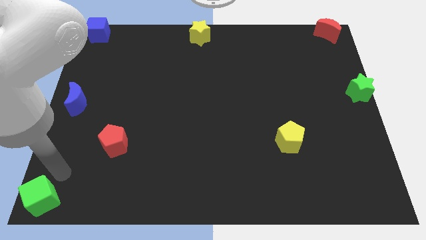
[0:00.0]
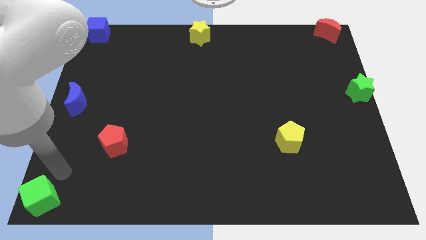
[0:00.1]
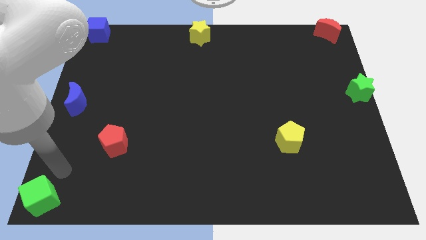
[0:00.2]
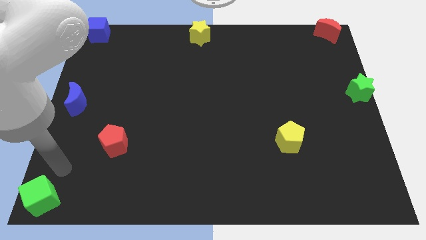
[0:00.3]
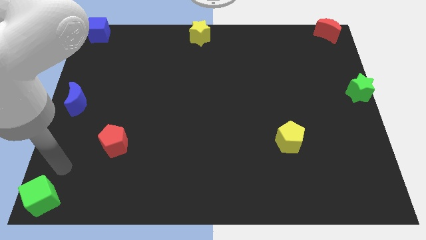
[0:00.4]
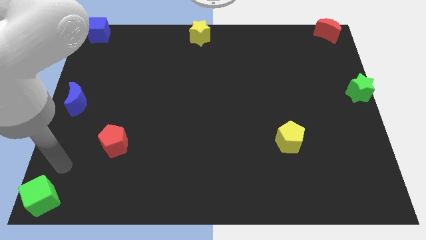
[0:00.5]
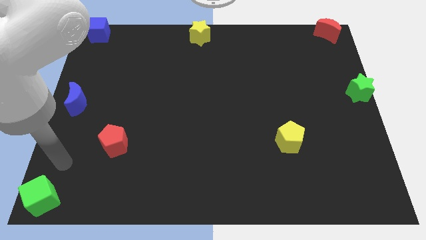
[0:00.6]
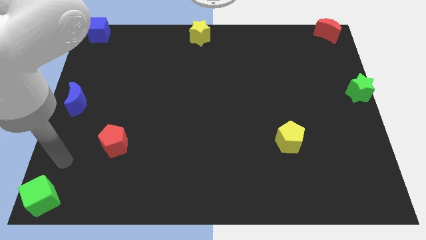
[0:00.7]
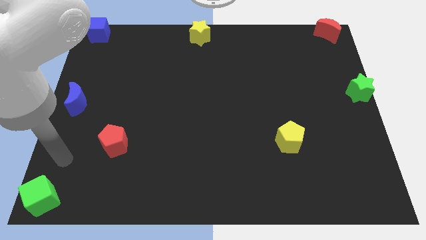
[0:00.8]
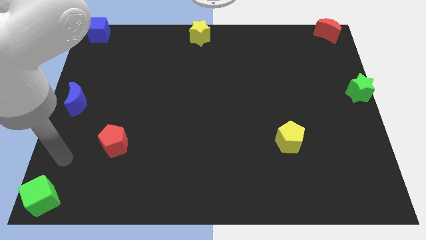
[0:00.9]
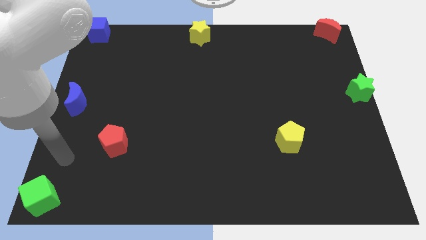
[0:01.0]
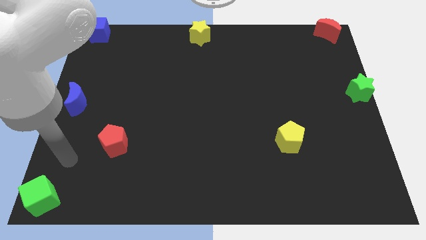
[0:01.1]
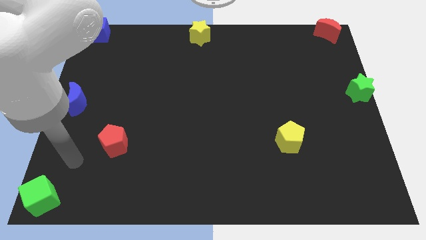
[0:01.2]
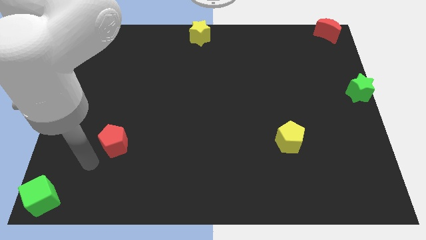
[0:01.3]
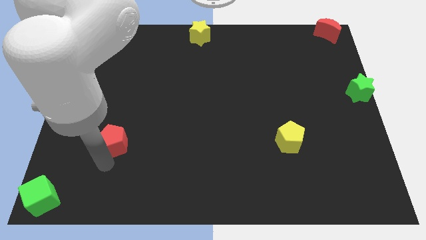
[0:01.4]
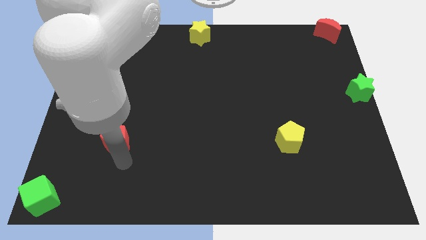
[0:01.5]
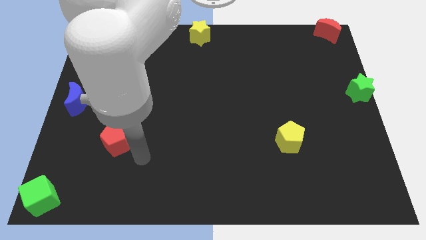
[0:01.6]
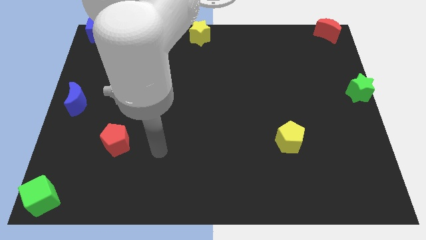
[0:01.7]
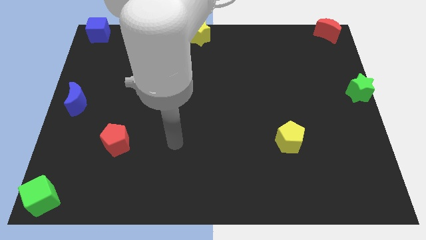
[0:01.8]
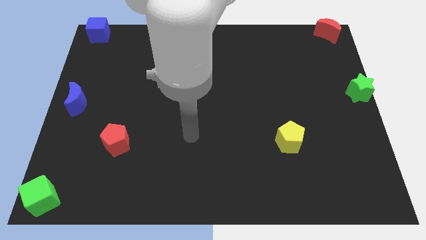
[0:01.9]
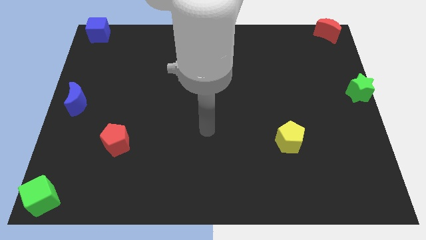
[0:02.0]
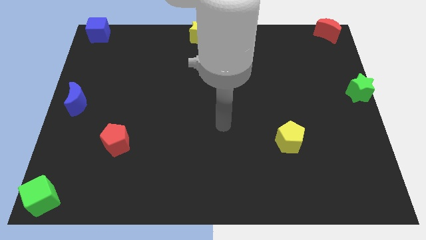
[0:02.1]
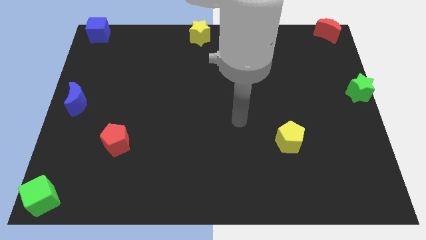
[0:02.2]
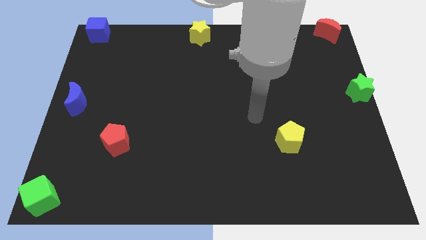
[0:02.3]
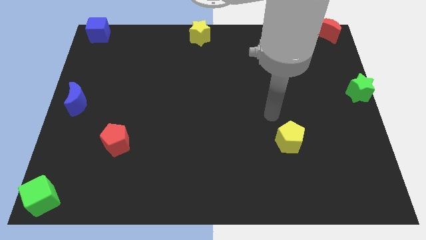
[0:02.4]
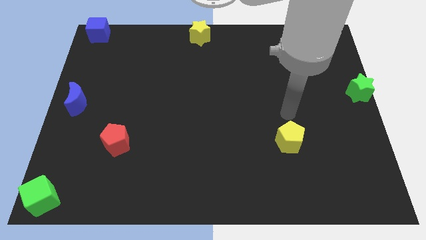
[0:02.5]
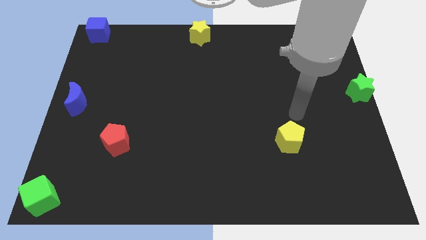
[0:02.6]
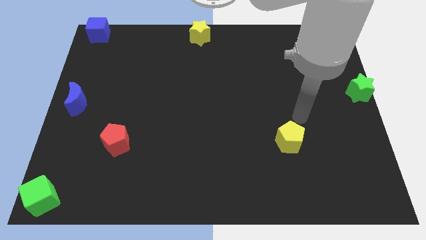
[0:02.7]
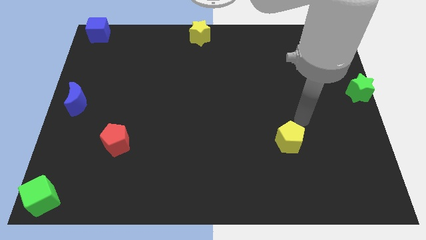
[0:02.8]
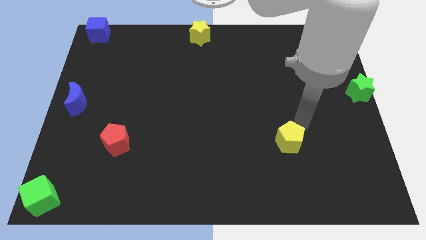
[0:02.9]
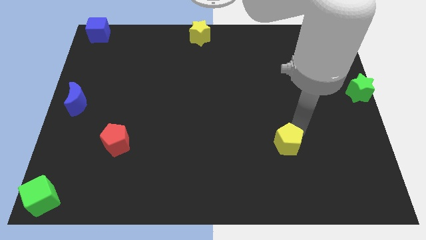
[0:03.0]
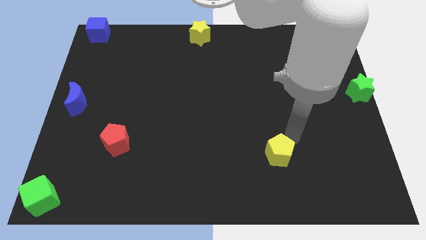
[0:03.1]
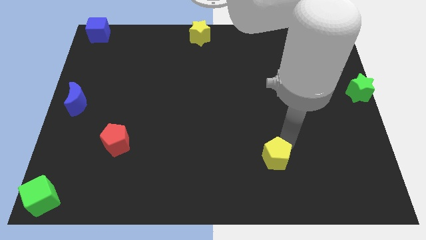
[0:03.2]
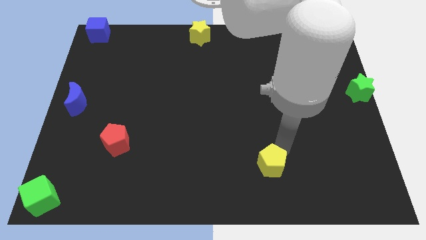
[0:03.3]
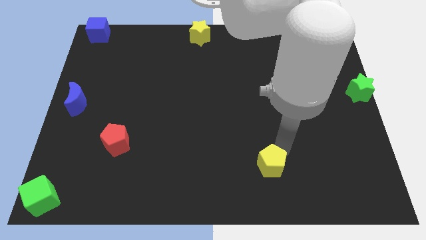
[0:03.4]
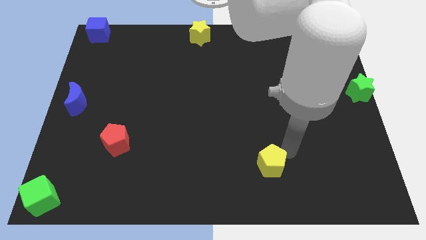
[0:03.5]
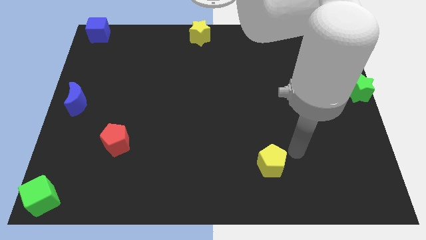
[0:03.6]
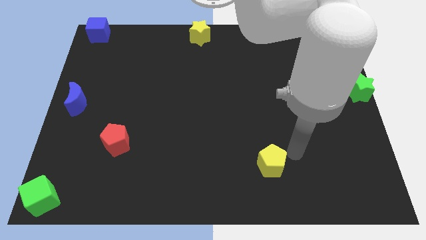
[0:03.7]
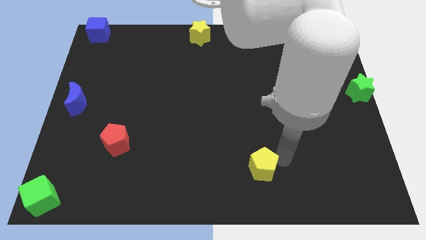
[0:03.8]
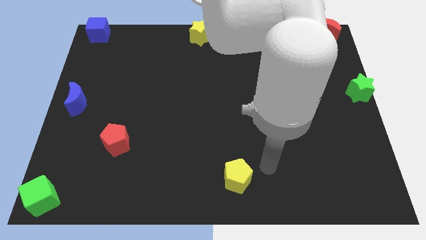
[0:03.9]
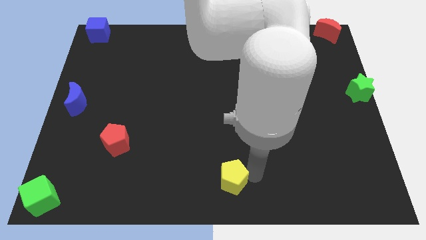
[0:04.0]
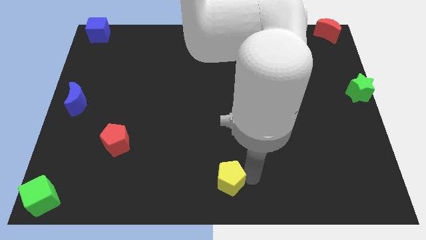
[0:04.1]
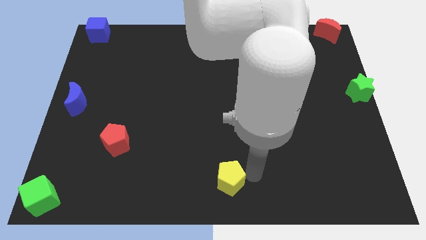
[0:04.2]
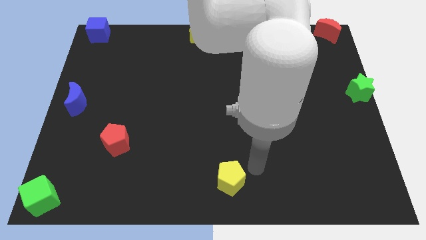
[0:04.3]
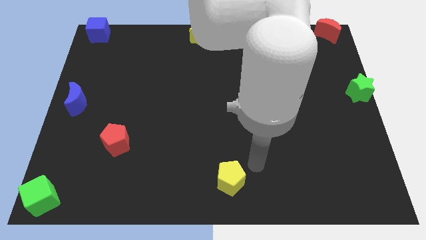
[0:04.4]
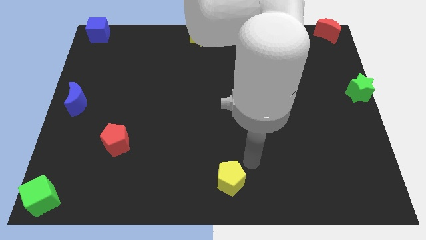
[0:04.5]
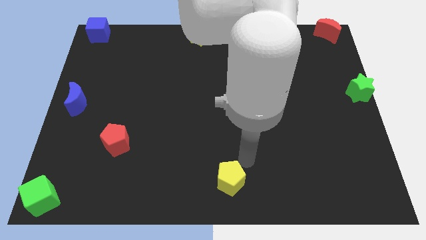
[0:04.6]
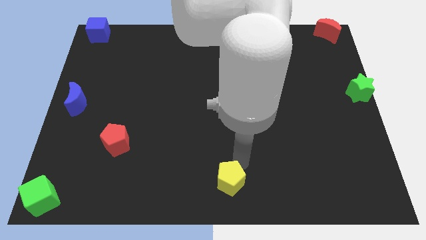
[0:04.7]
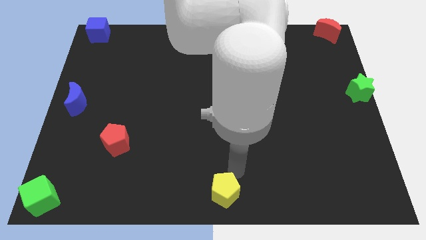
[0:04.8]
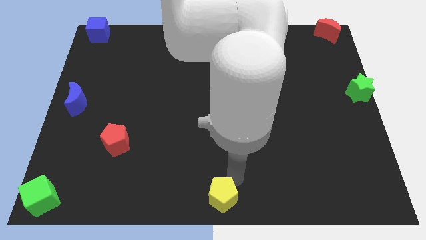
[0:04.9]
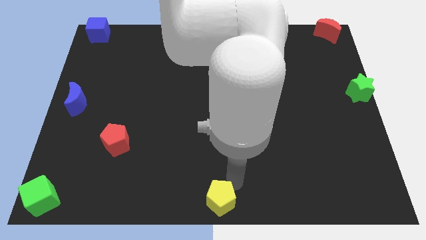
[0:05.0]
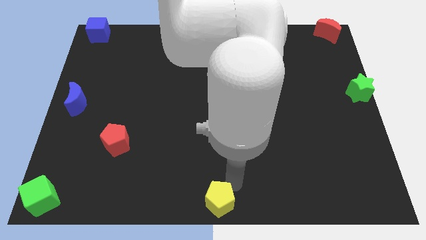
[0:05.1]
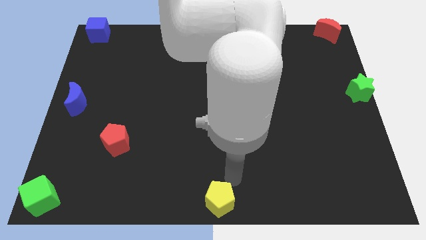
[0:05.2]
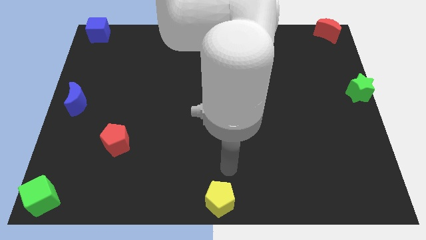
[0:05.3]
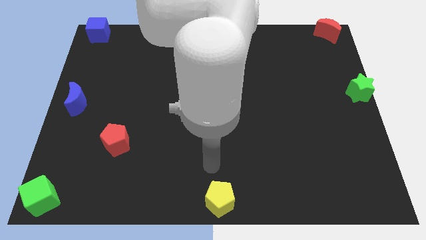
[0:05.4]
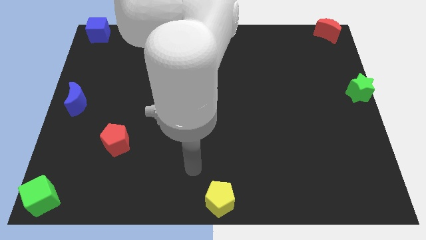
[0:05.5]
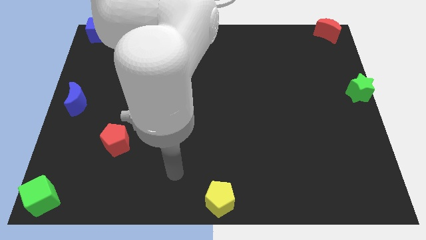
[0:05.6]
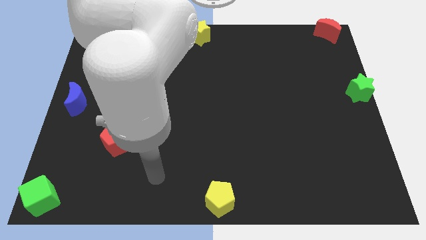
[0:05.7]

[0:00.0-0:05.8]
place the yellow pentagon towards the bottom center of the board

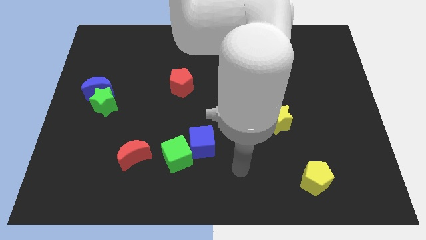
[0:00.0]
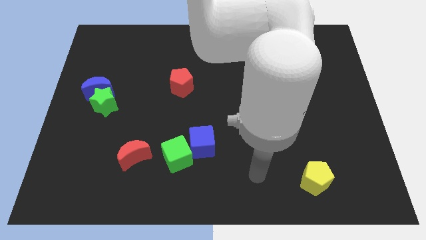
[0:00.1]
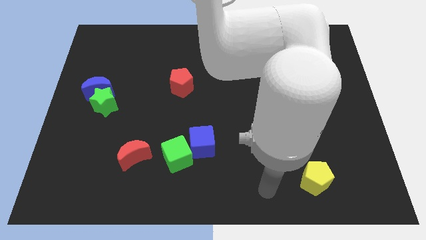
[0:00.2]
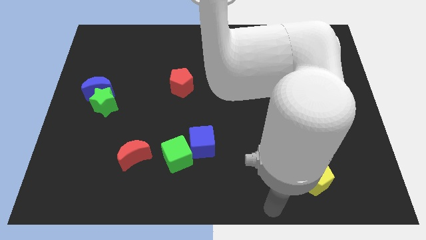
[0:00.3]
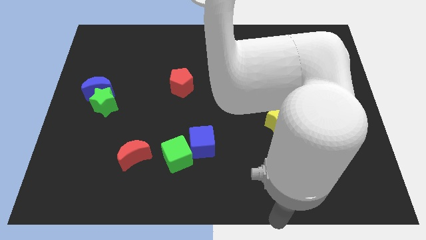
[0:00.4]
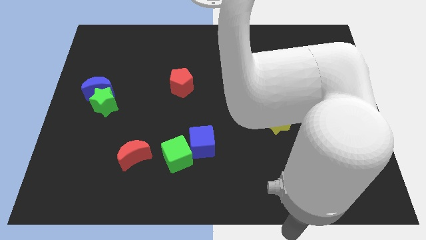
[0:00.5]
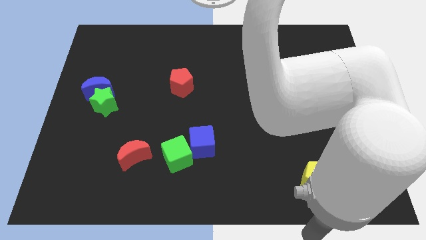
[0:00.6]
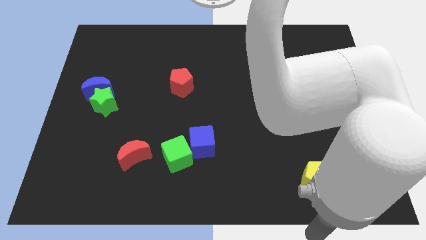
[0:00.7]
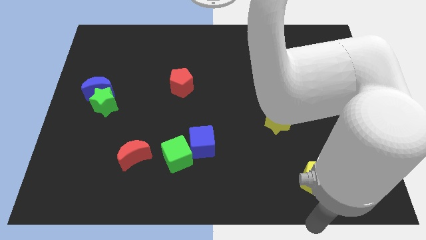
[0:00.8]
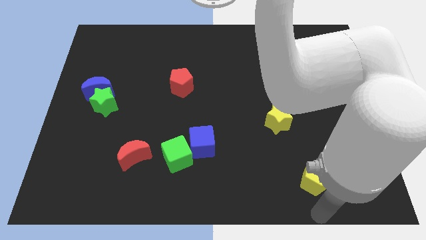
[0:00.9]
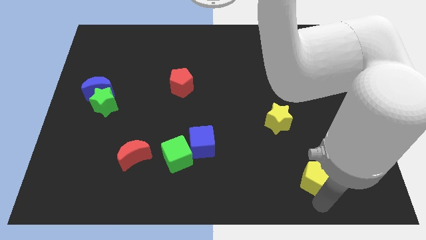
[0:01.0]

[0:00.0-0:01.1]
point your arm at the bottom of the yellow pentagon

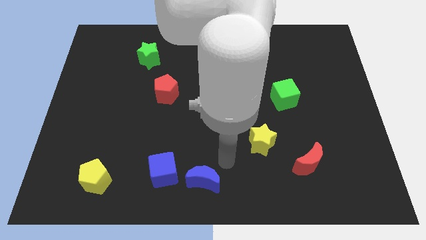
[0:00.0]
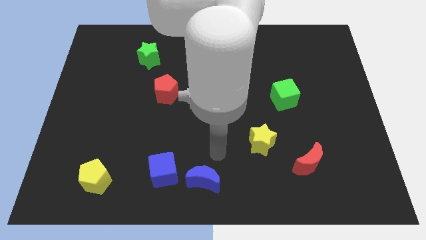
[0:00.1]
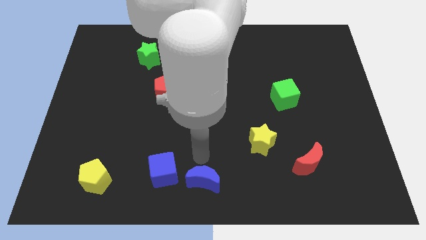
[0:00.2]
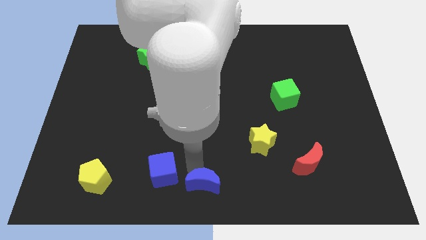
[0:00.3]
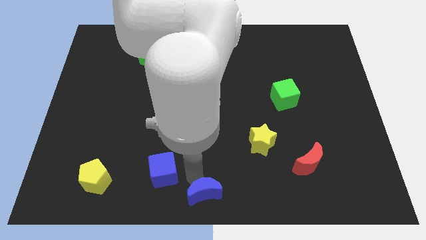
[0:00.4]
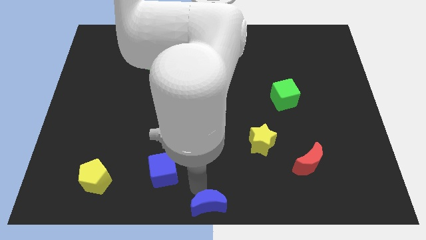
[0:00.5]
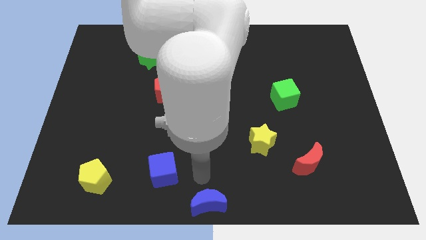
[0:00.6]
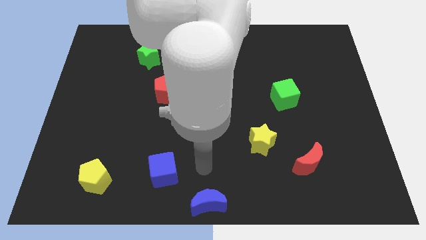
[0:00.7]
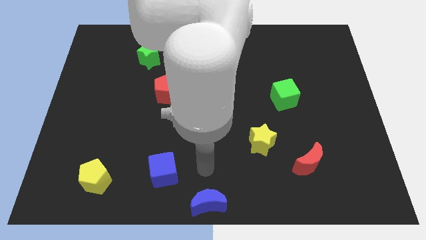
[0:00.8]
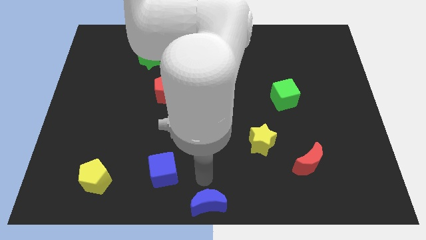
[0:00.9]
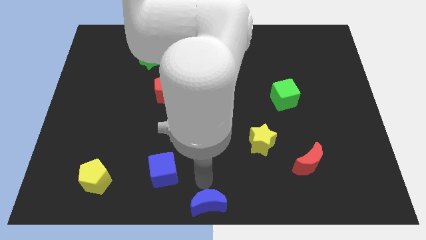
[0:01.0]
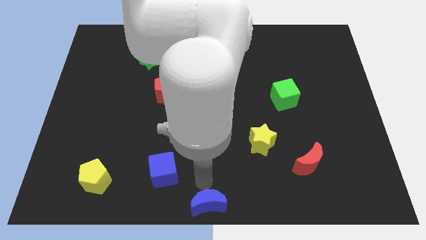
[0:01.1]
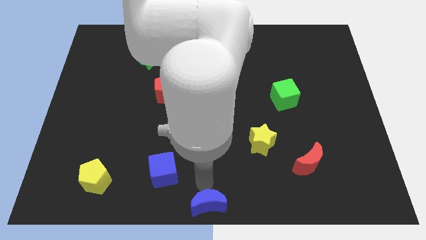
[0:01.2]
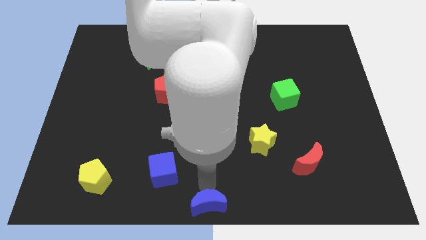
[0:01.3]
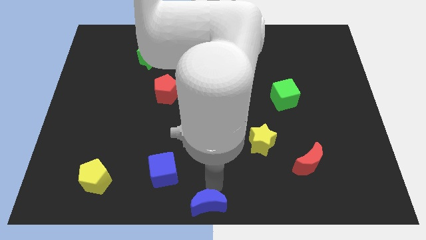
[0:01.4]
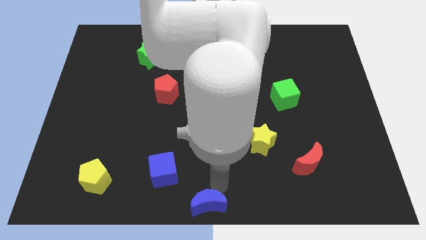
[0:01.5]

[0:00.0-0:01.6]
push the blue moon to the bottom center

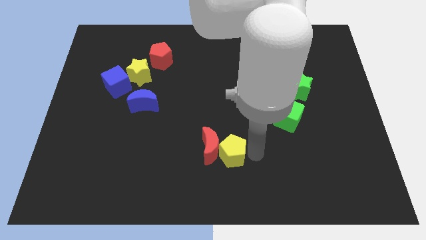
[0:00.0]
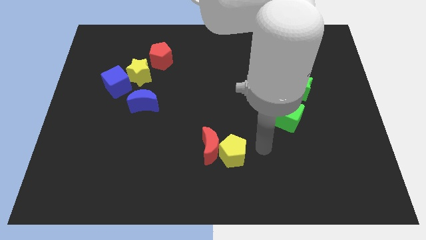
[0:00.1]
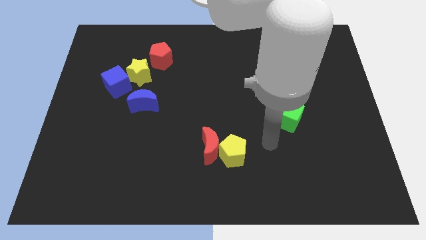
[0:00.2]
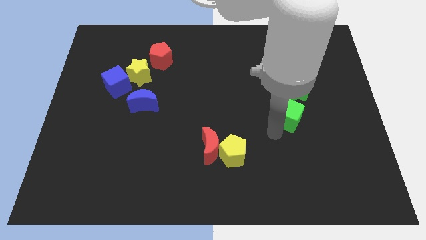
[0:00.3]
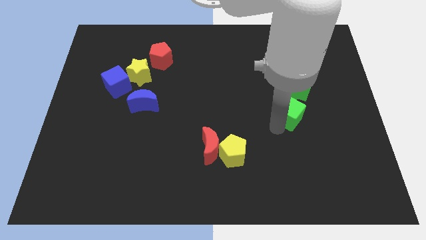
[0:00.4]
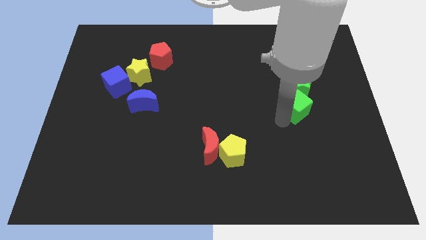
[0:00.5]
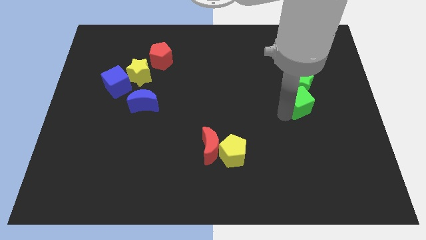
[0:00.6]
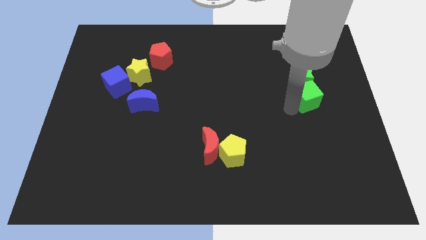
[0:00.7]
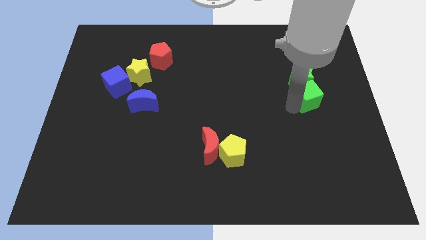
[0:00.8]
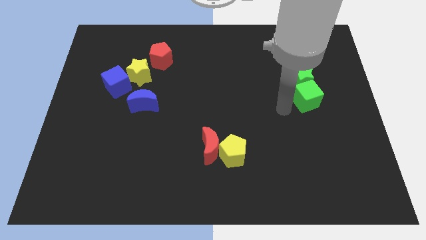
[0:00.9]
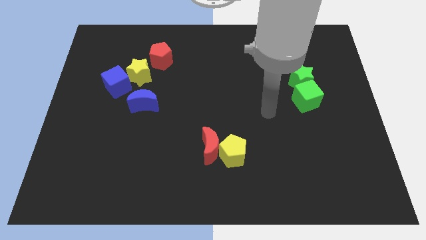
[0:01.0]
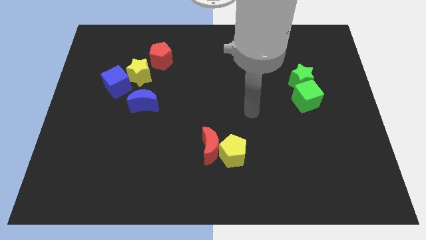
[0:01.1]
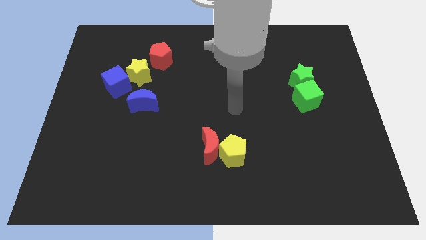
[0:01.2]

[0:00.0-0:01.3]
push the green cube into the green star
